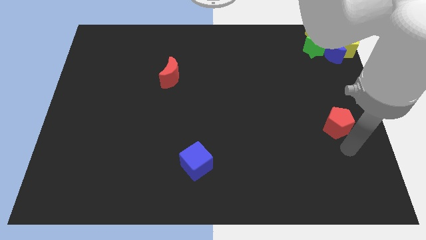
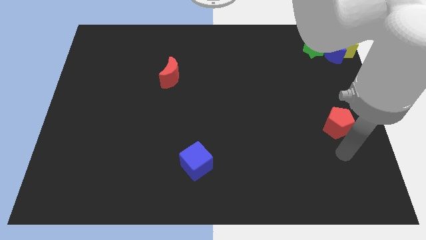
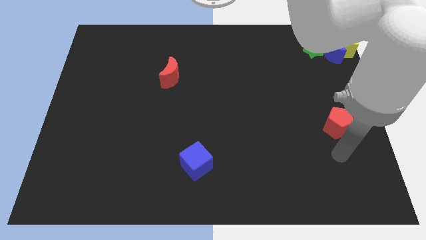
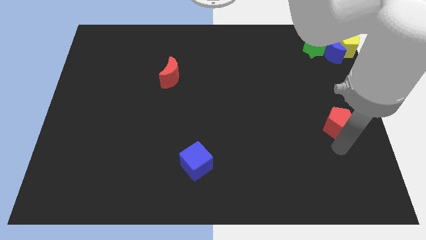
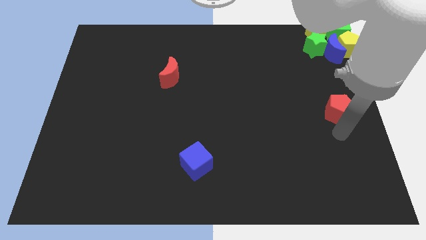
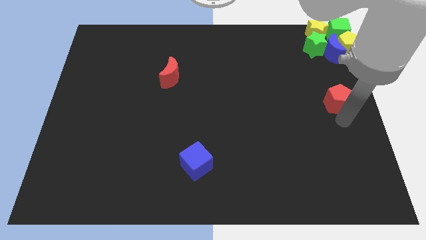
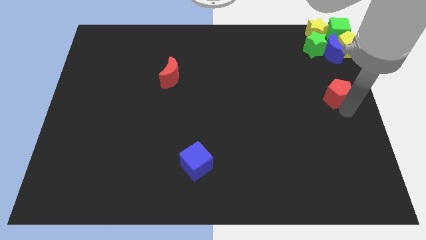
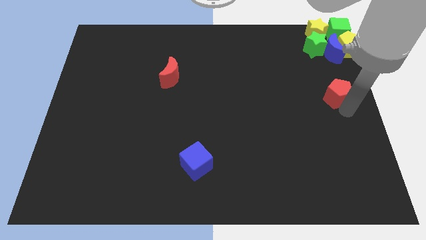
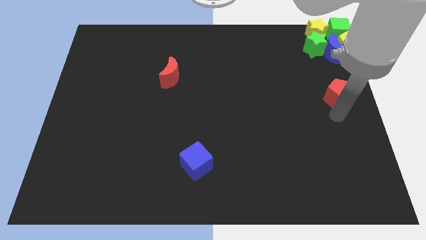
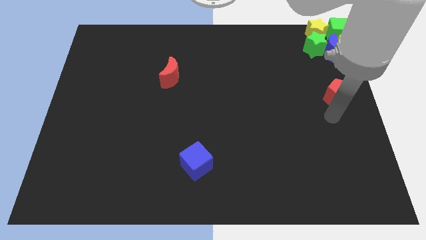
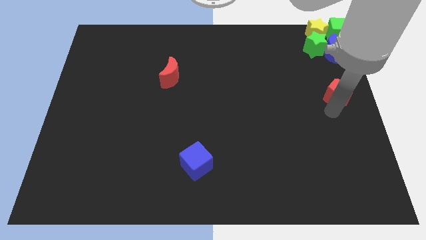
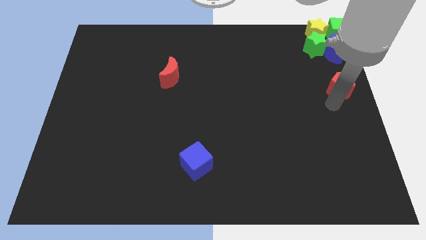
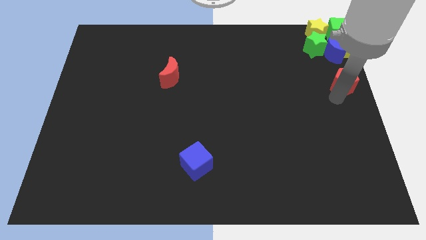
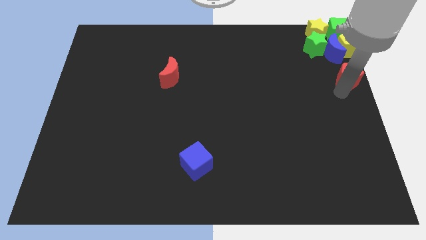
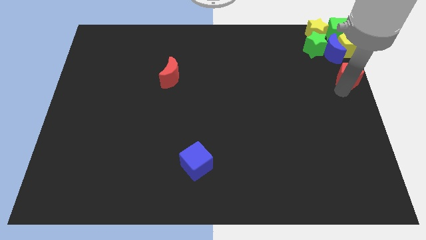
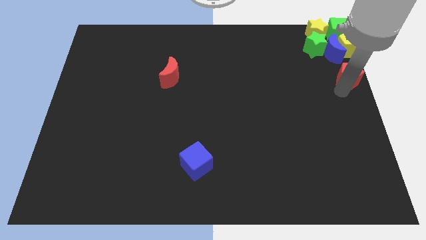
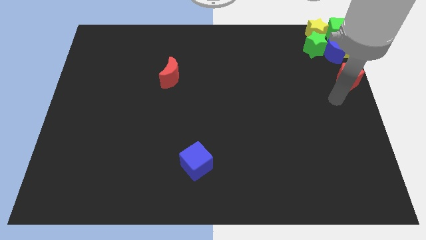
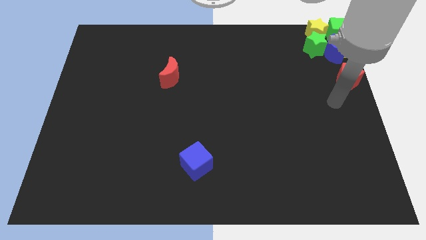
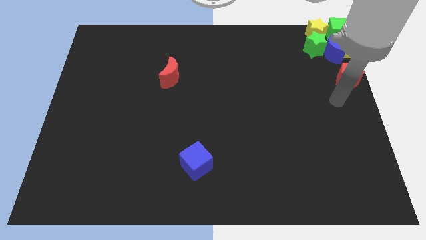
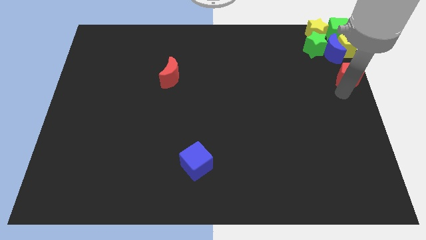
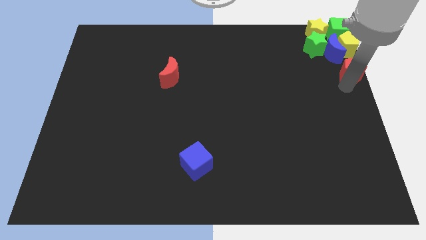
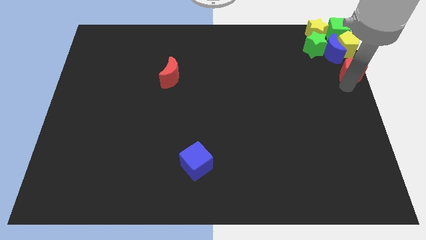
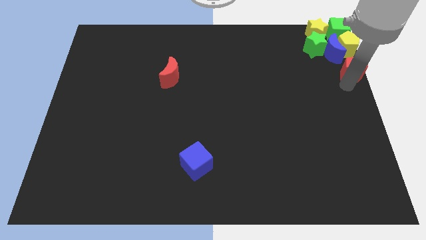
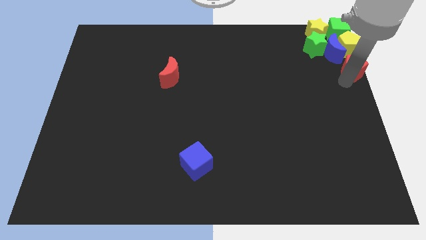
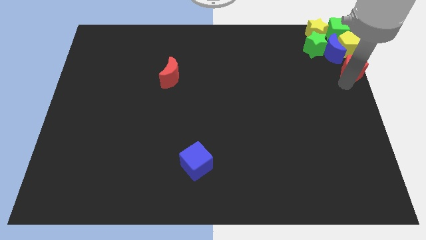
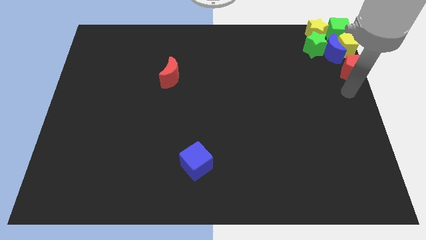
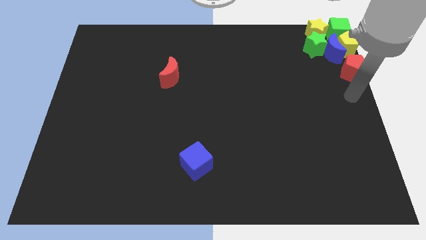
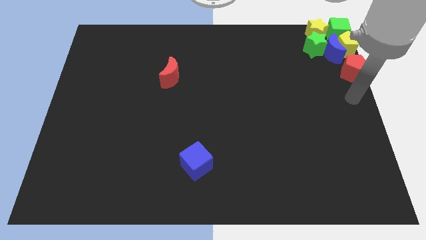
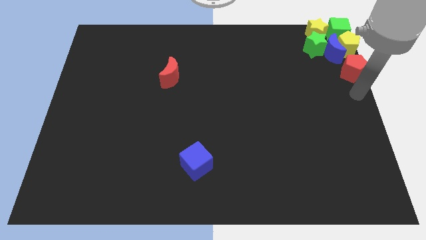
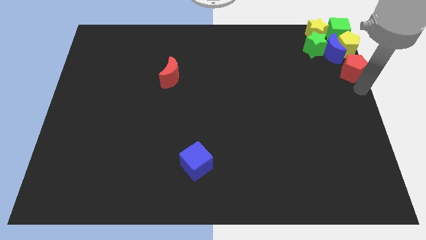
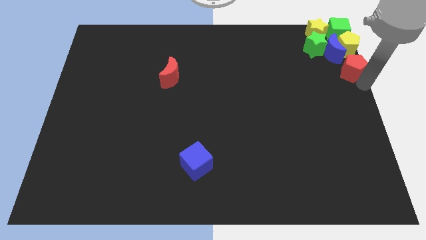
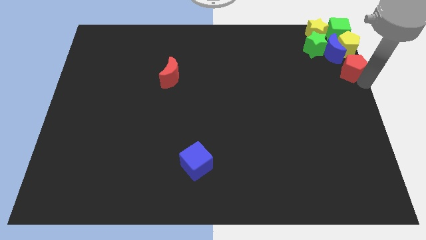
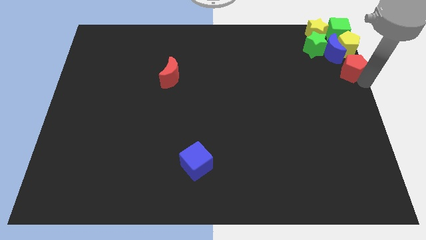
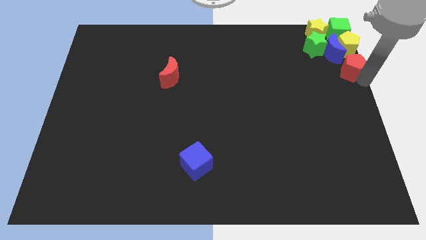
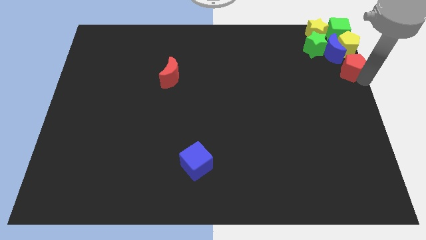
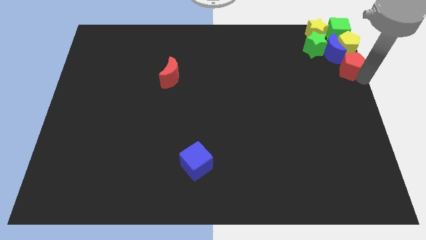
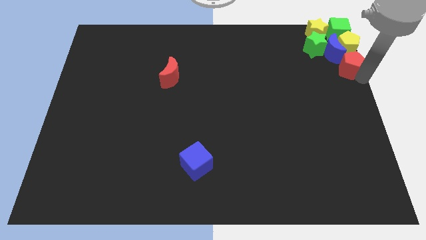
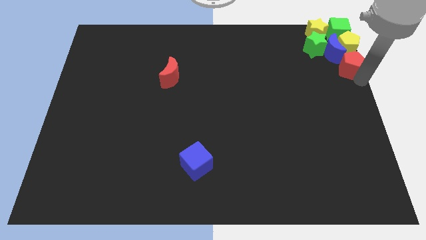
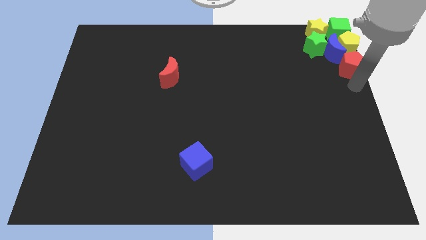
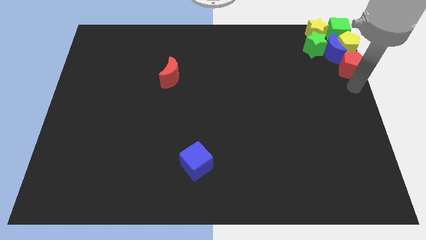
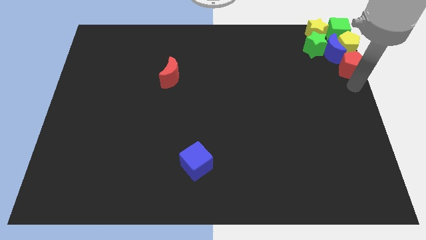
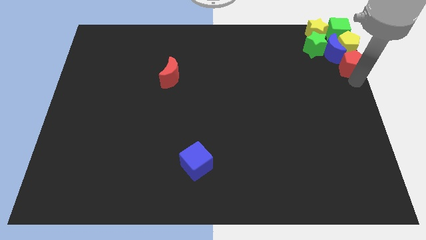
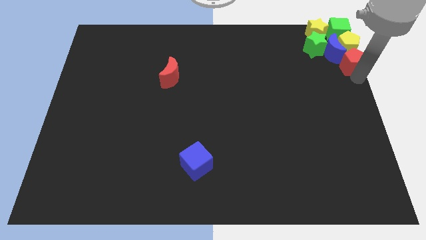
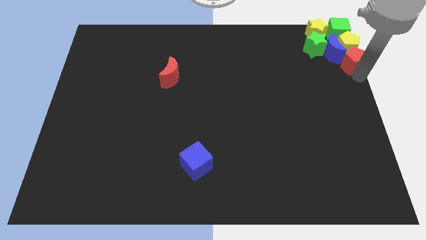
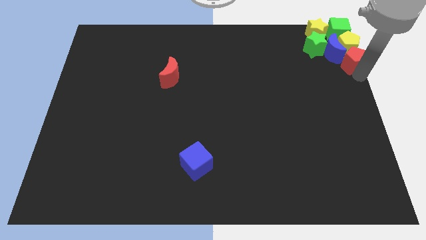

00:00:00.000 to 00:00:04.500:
push the red pentagon into the the group of blocks

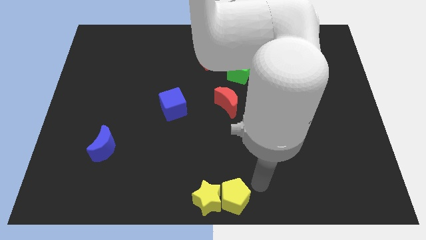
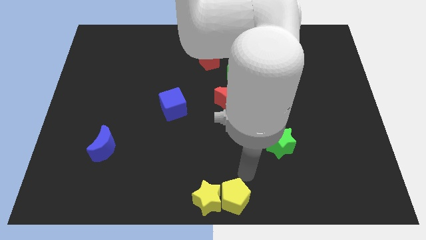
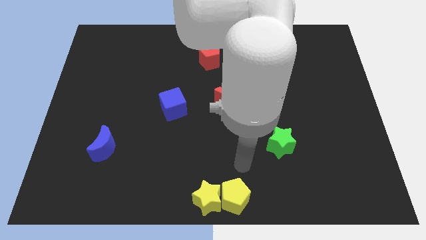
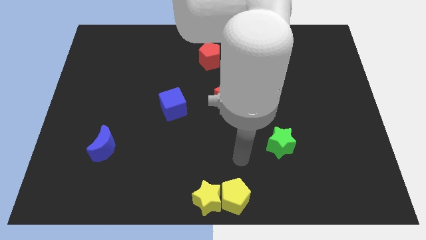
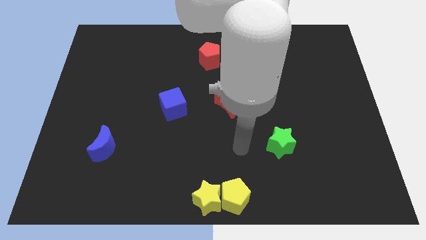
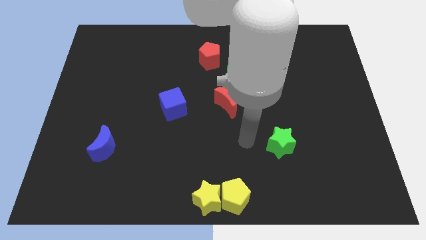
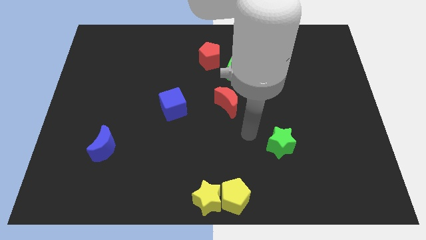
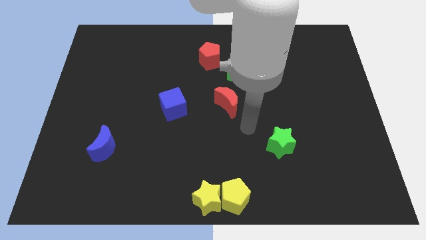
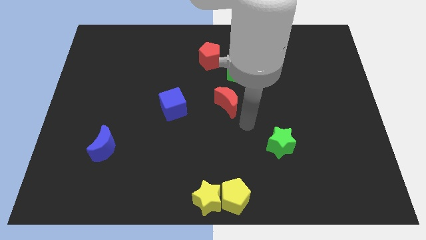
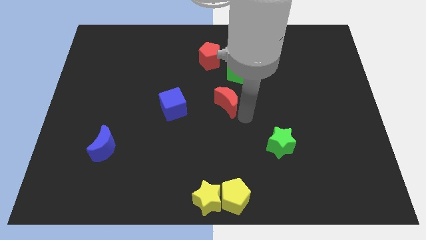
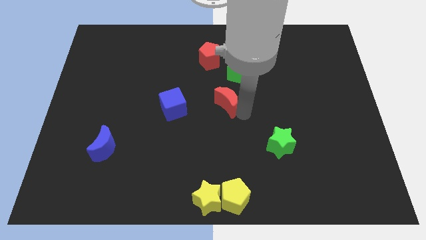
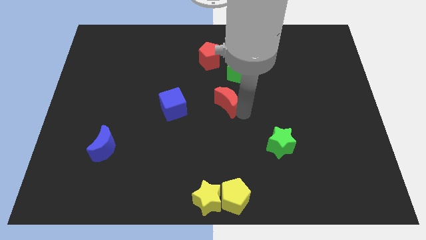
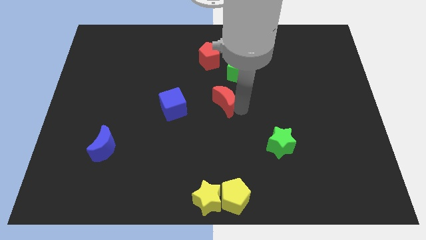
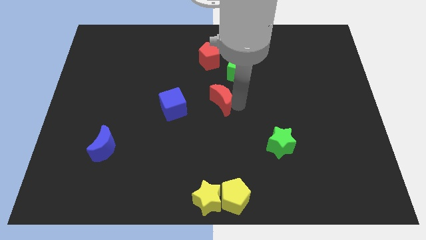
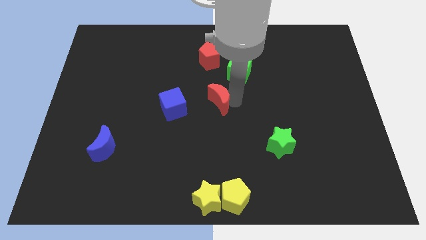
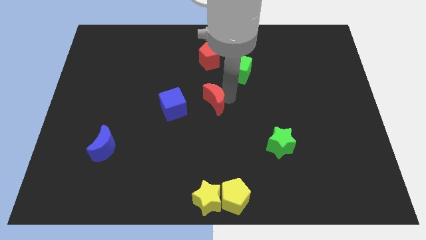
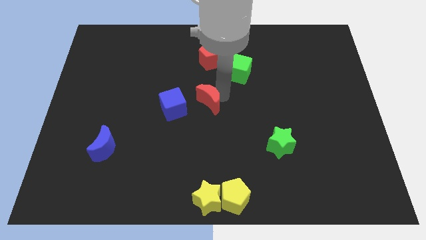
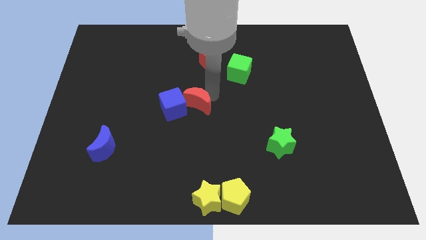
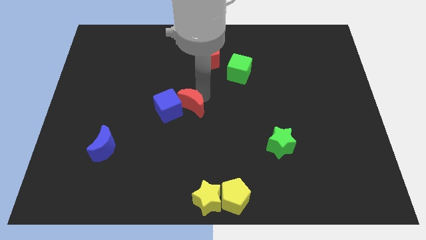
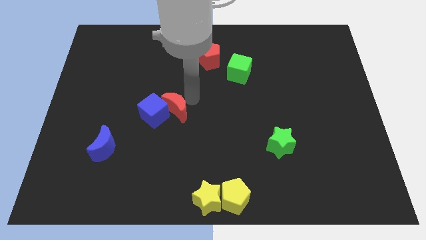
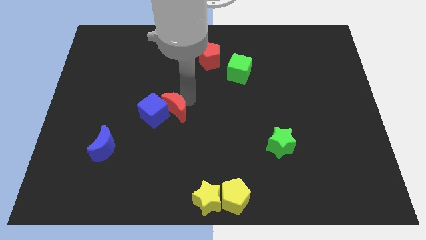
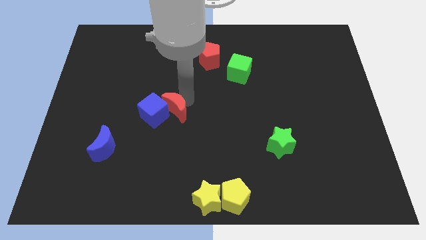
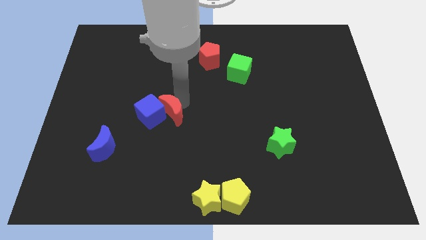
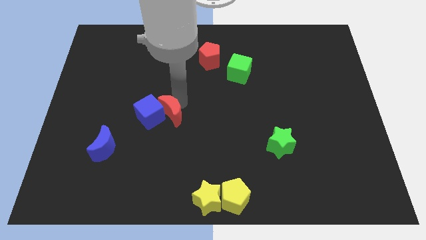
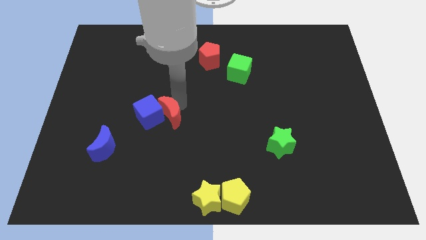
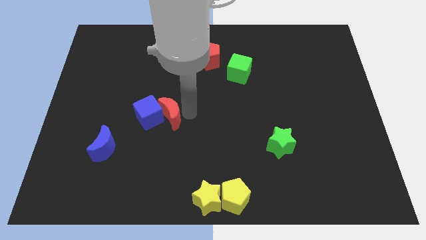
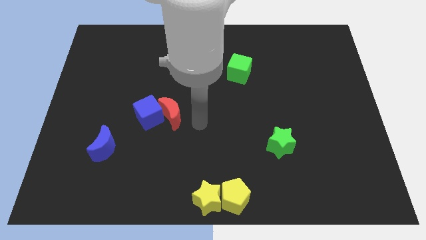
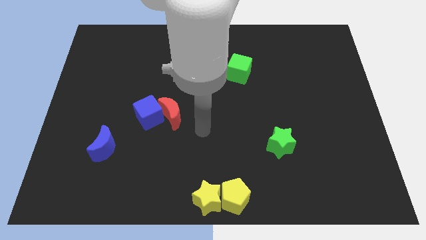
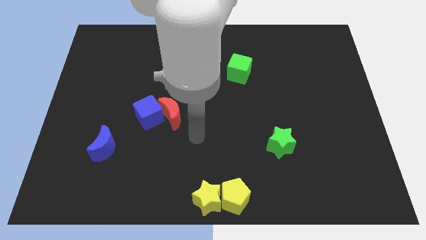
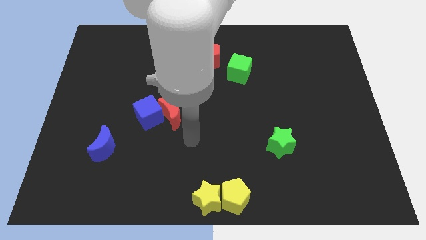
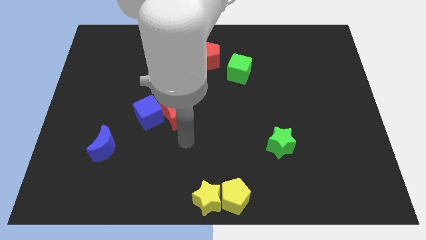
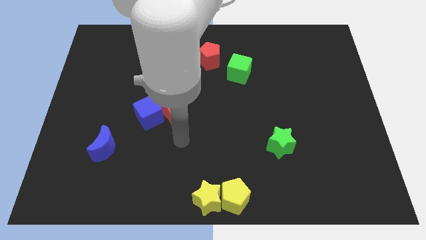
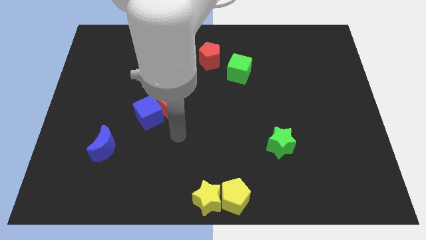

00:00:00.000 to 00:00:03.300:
push the red moon into the blue cube

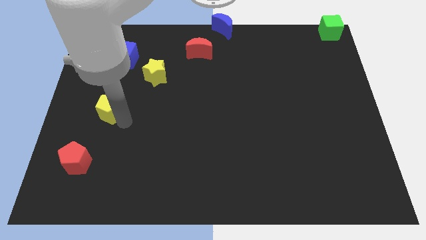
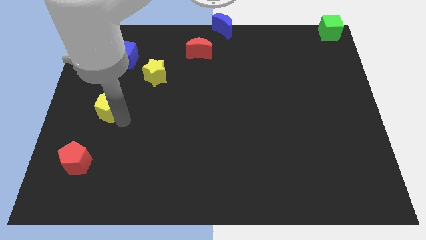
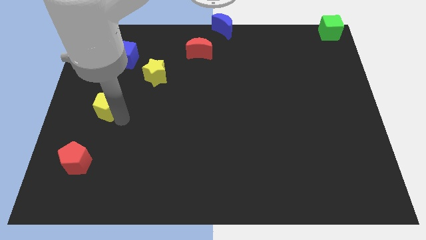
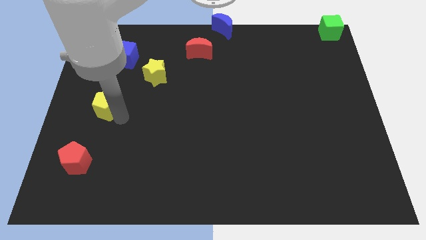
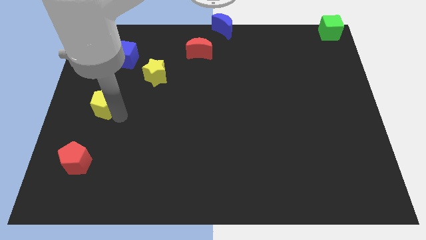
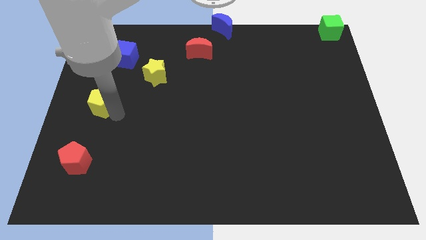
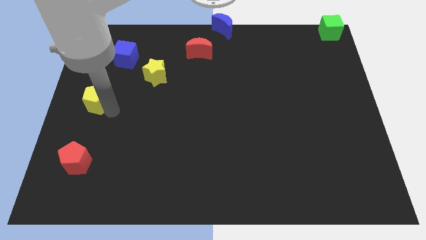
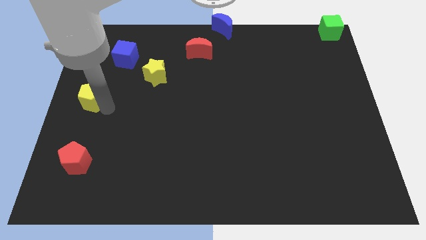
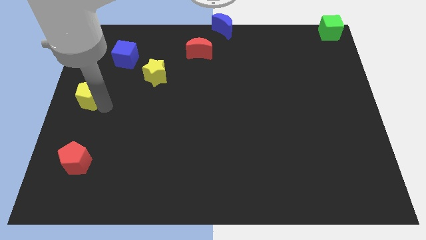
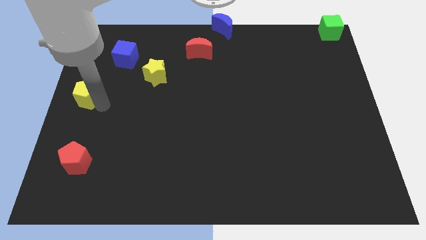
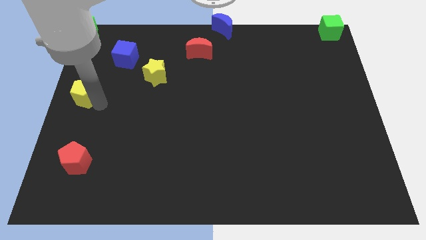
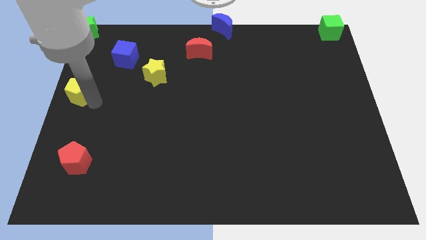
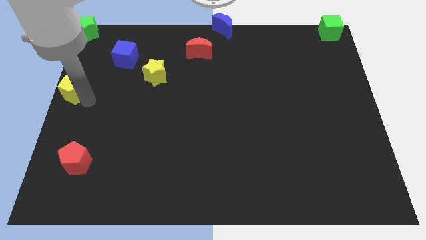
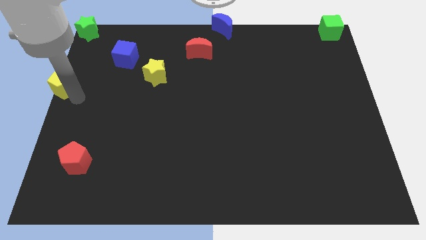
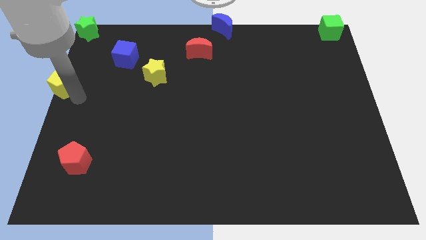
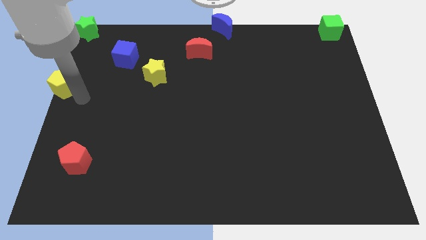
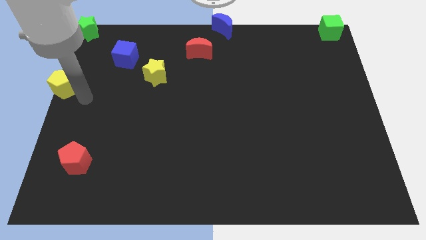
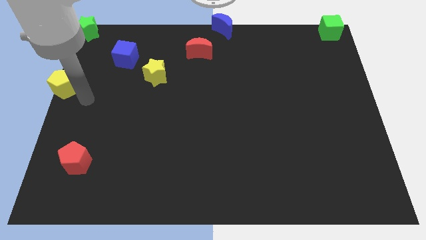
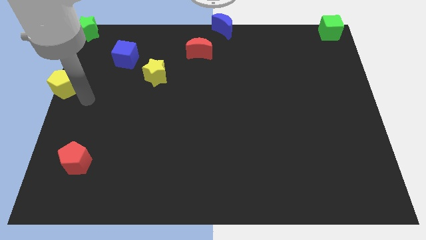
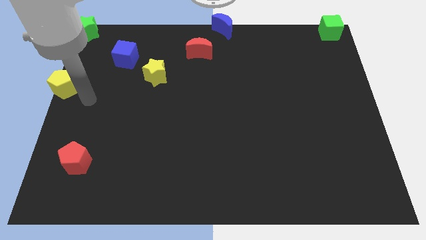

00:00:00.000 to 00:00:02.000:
push the yellow pentagon diagonally top left to the red pentagon
